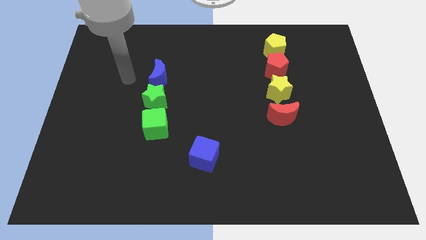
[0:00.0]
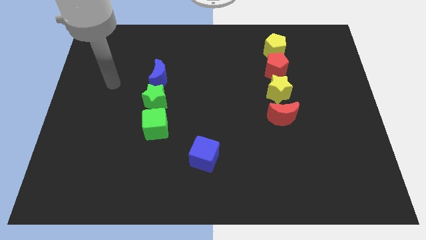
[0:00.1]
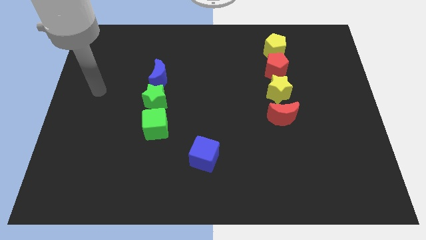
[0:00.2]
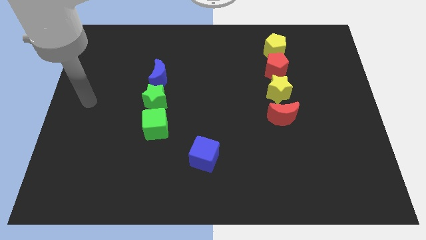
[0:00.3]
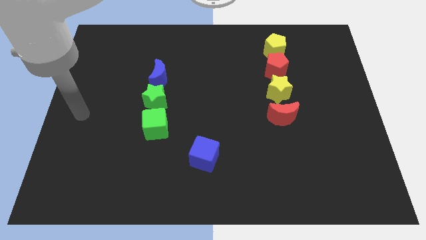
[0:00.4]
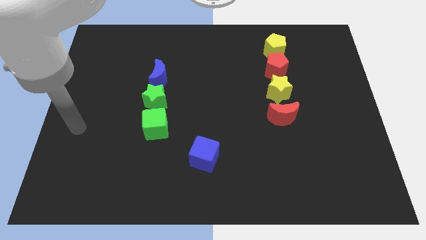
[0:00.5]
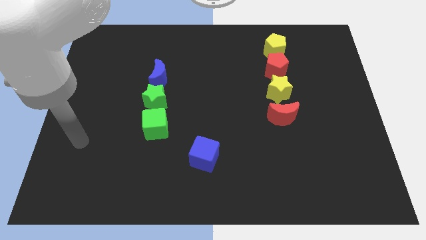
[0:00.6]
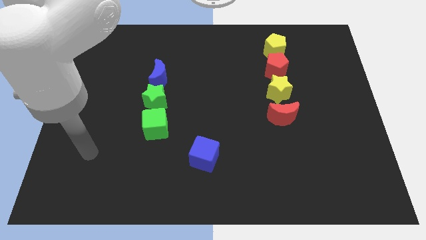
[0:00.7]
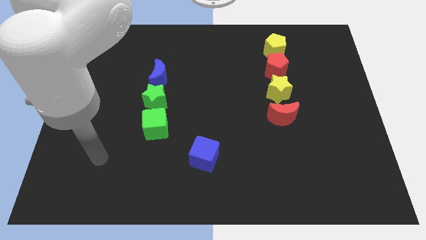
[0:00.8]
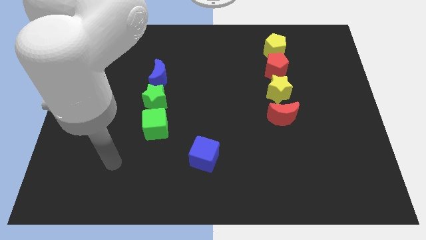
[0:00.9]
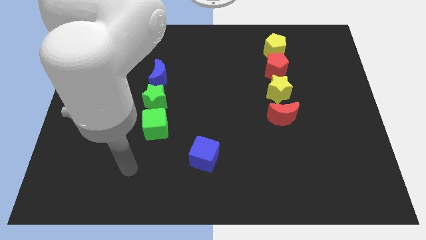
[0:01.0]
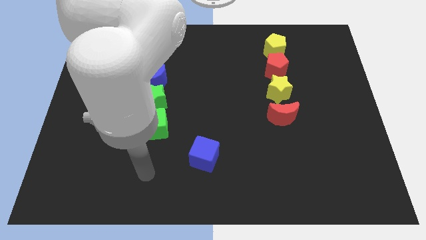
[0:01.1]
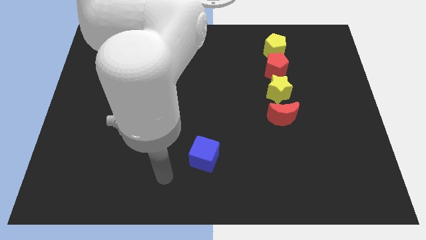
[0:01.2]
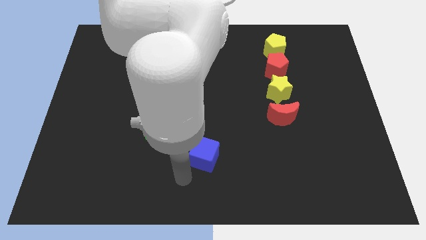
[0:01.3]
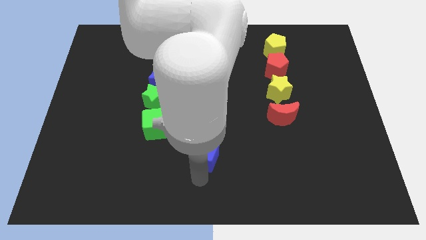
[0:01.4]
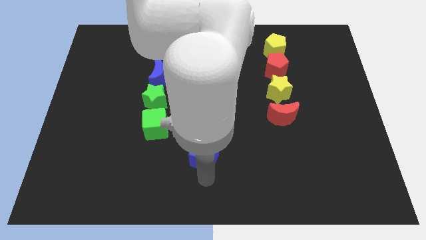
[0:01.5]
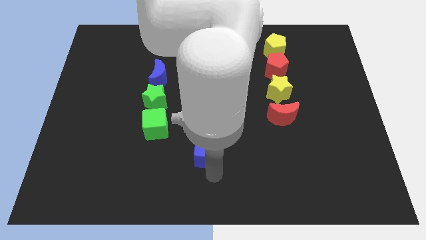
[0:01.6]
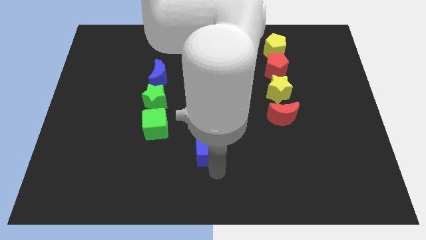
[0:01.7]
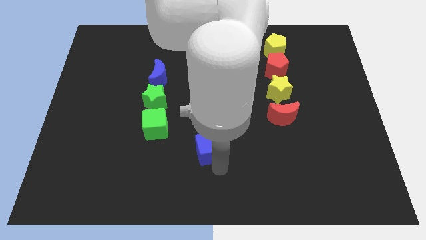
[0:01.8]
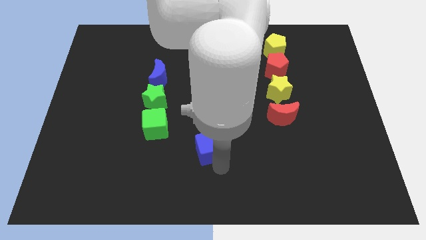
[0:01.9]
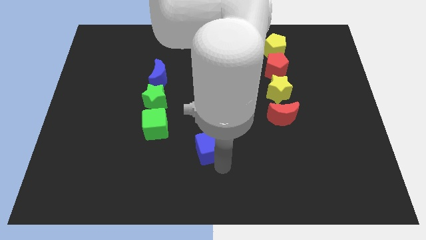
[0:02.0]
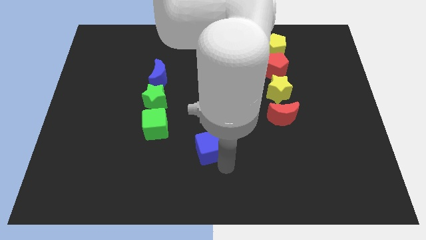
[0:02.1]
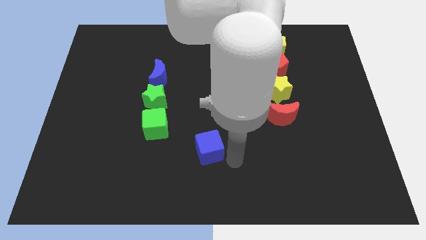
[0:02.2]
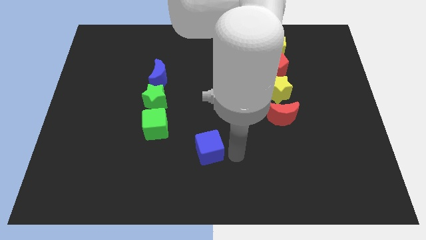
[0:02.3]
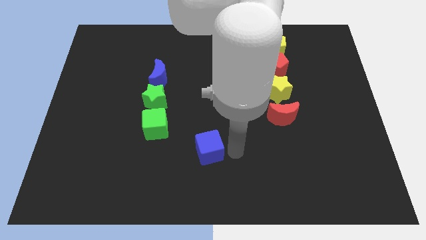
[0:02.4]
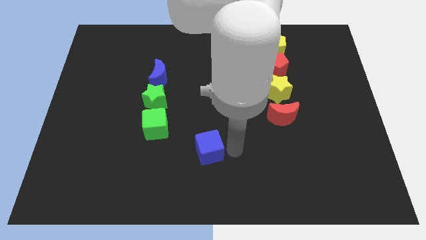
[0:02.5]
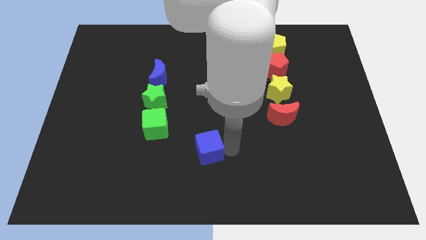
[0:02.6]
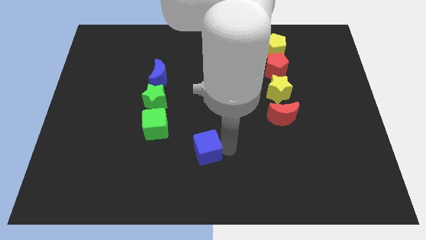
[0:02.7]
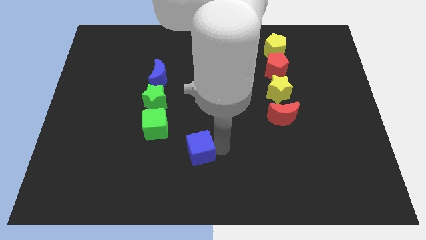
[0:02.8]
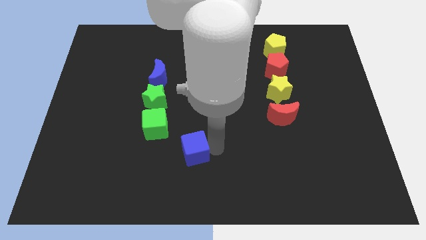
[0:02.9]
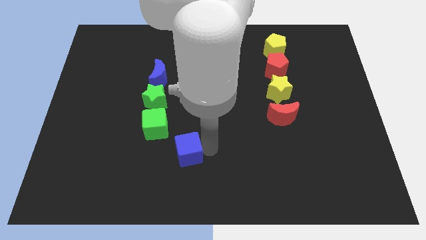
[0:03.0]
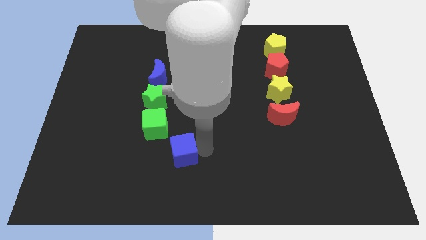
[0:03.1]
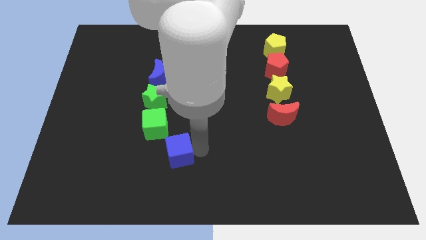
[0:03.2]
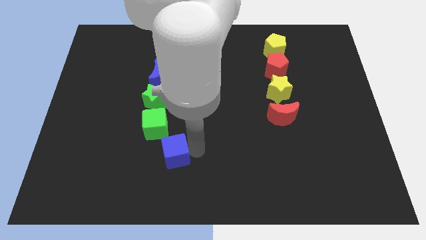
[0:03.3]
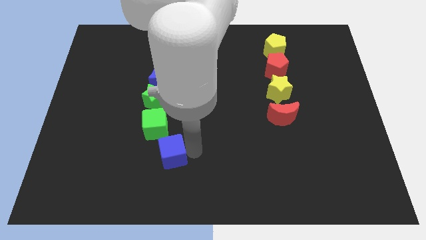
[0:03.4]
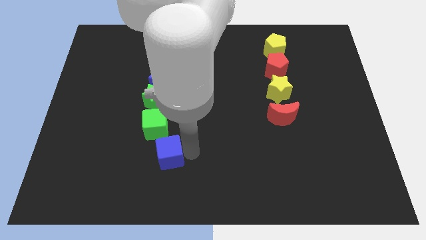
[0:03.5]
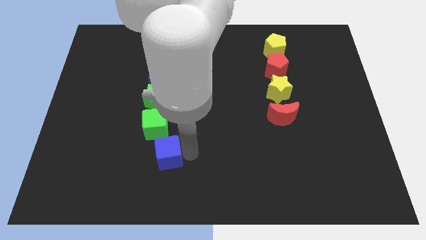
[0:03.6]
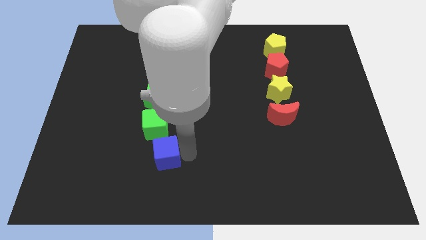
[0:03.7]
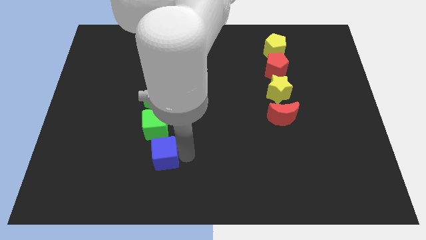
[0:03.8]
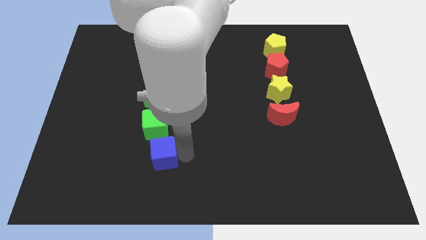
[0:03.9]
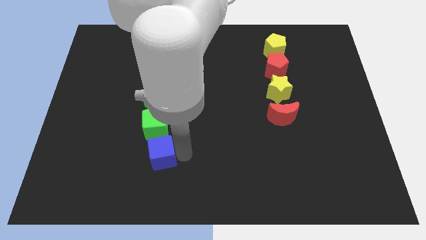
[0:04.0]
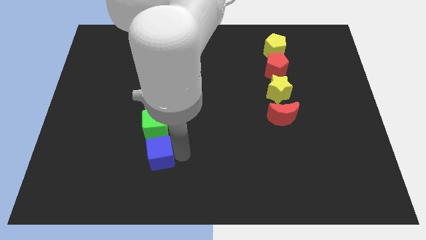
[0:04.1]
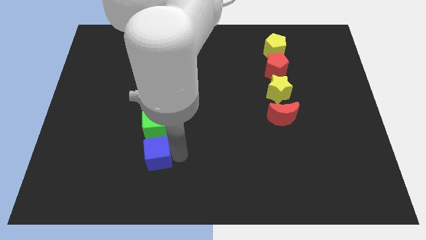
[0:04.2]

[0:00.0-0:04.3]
move the blue cube below to the green cube

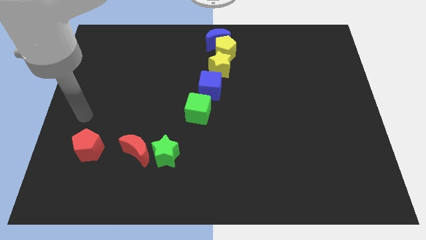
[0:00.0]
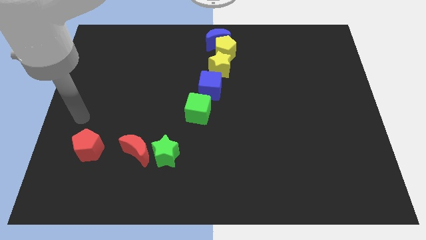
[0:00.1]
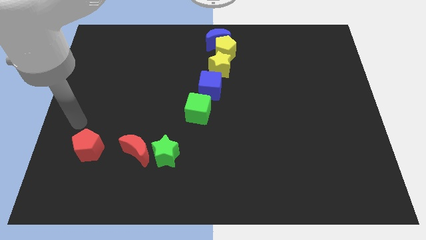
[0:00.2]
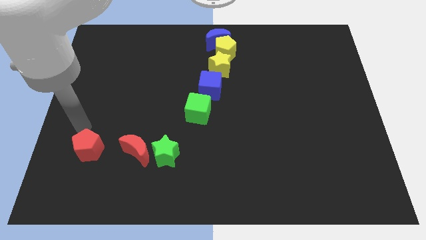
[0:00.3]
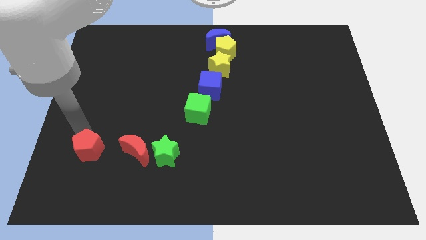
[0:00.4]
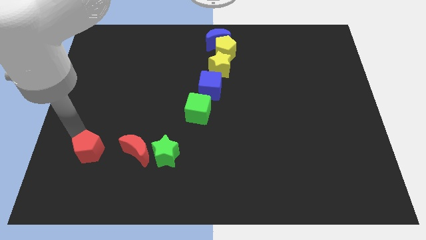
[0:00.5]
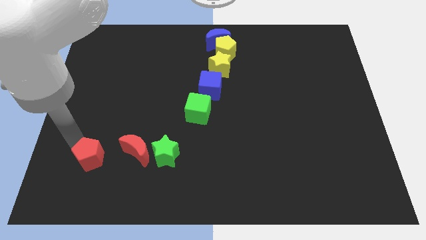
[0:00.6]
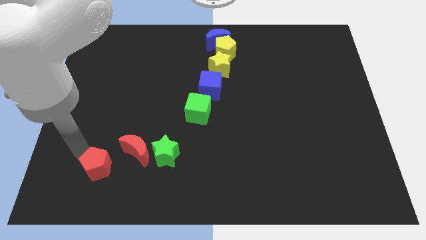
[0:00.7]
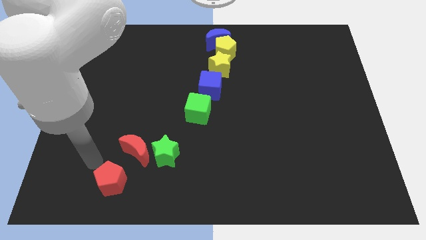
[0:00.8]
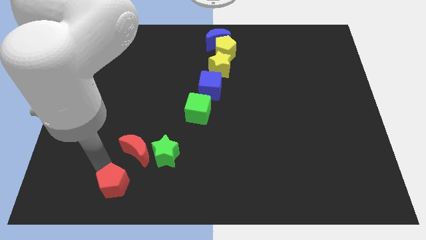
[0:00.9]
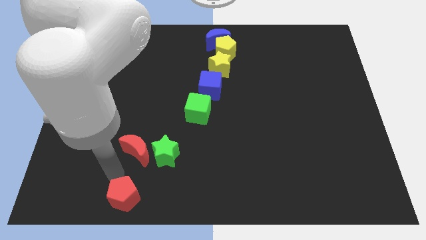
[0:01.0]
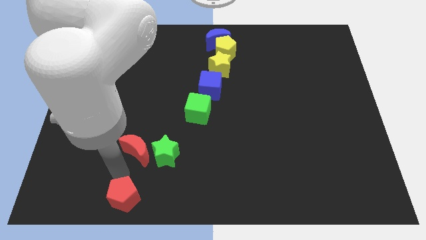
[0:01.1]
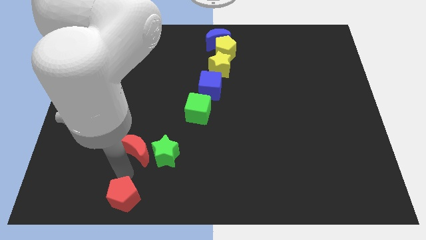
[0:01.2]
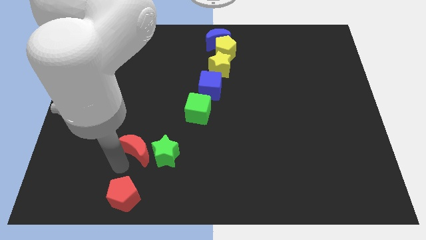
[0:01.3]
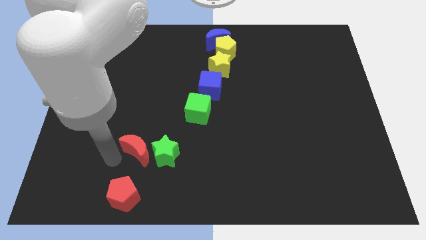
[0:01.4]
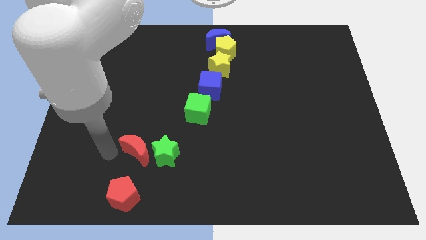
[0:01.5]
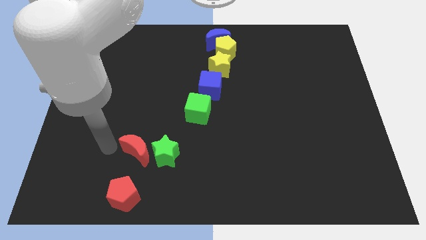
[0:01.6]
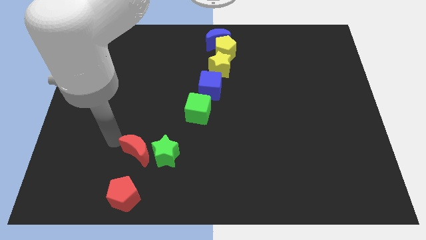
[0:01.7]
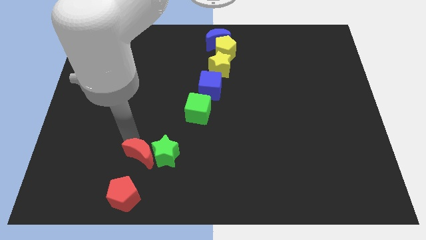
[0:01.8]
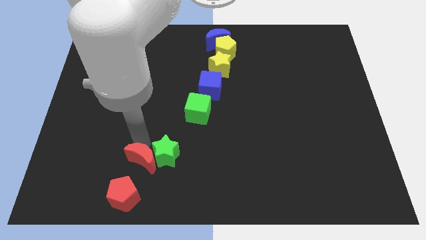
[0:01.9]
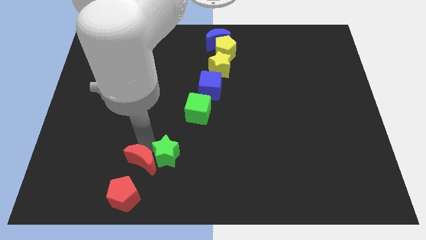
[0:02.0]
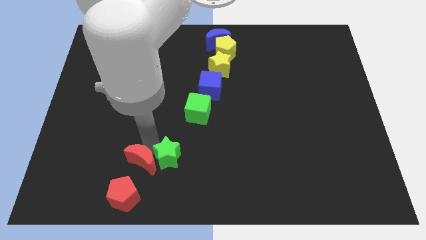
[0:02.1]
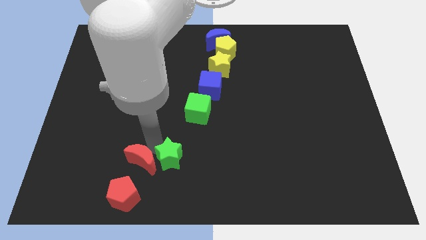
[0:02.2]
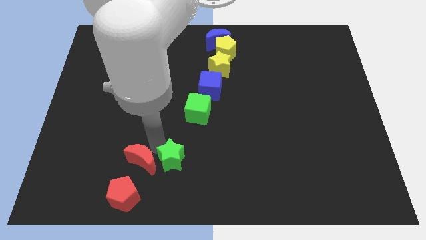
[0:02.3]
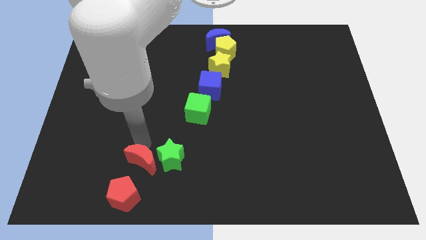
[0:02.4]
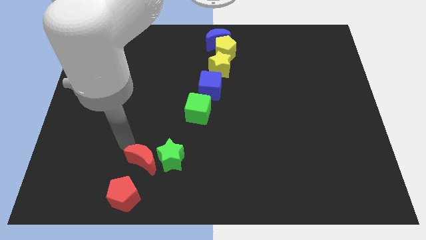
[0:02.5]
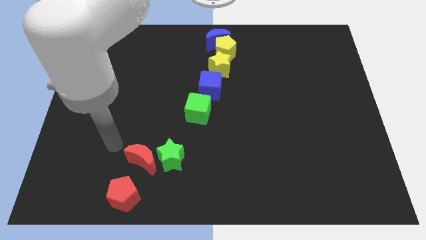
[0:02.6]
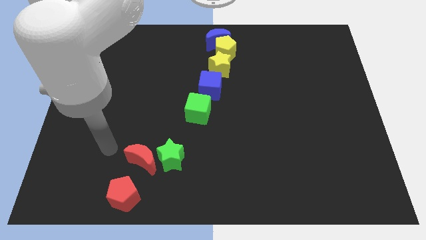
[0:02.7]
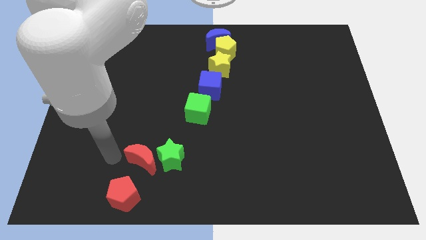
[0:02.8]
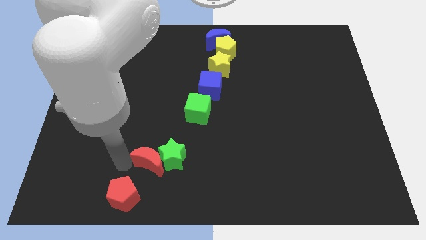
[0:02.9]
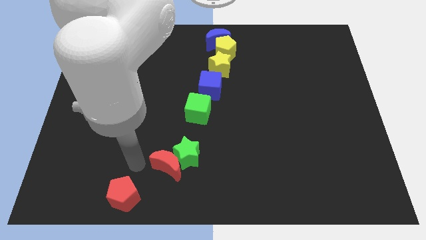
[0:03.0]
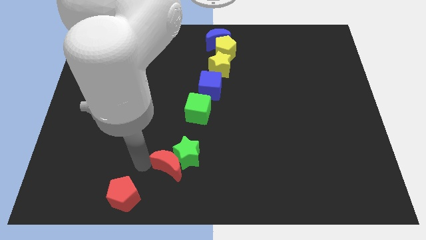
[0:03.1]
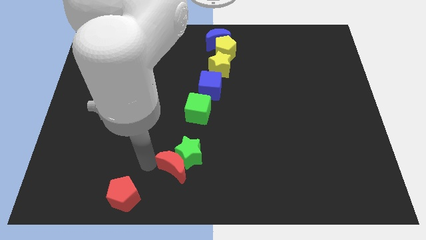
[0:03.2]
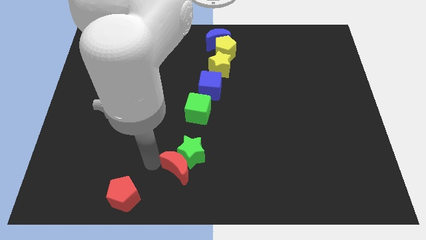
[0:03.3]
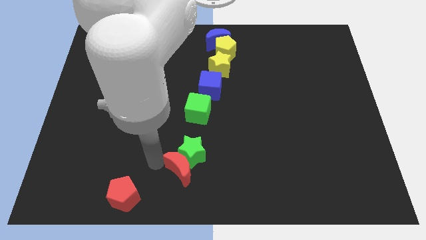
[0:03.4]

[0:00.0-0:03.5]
move red pentagon to the bottom center slightly move red green star

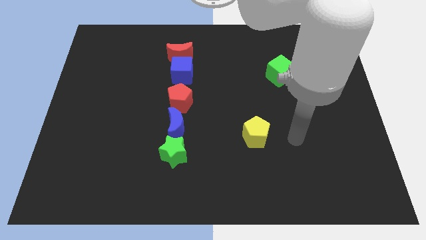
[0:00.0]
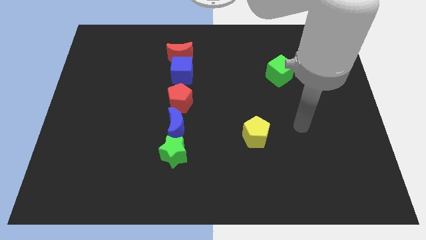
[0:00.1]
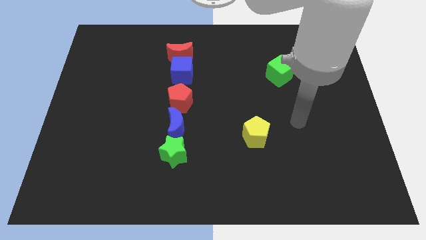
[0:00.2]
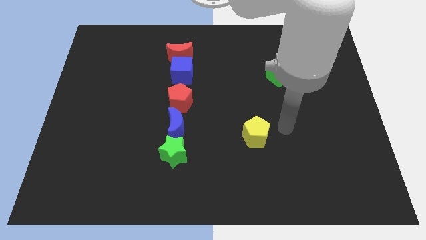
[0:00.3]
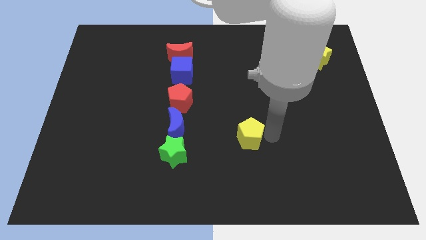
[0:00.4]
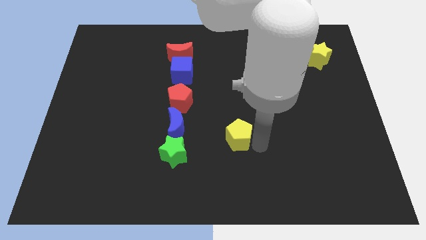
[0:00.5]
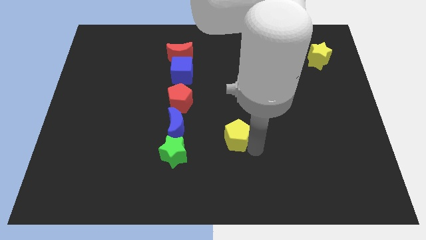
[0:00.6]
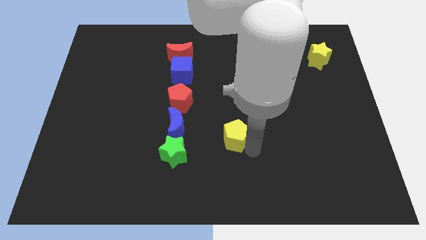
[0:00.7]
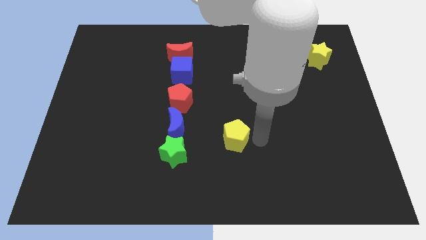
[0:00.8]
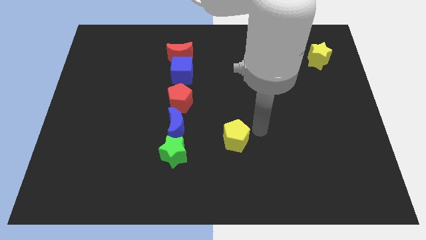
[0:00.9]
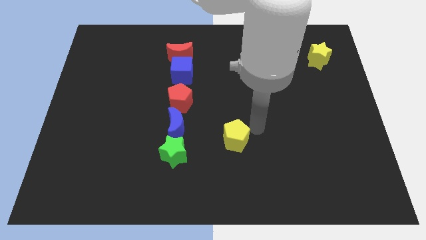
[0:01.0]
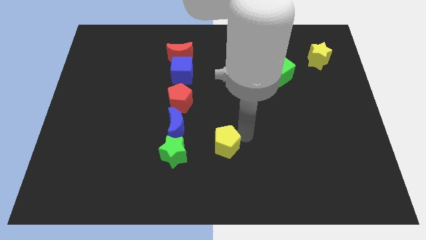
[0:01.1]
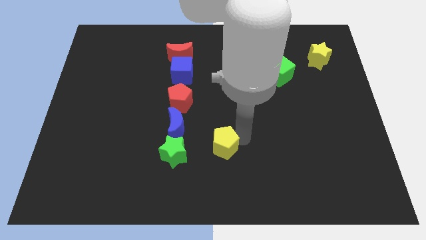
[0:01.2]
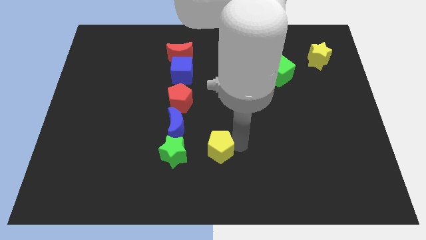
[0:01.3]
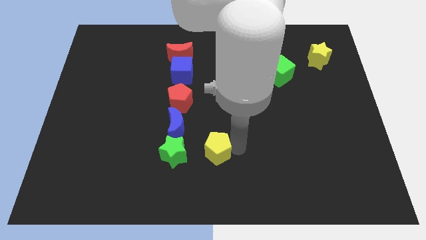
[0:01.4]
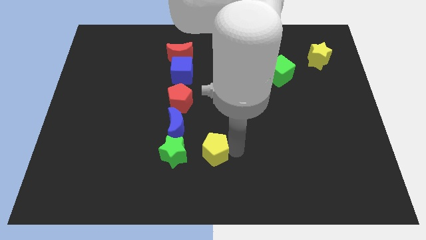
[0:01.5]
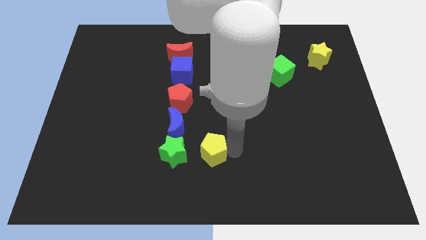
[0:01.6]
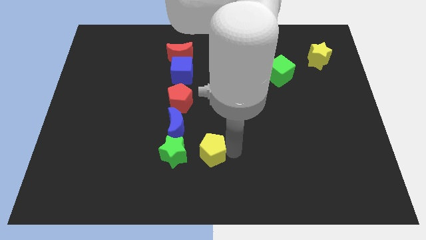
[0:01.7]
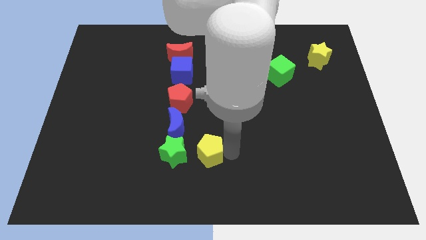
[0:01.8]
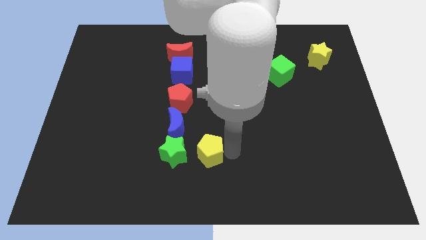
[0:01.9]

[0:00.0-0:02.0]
slide the yellow pentagon towards the right side of the green cube
